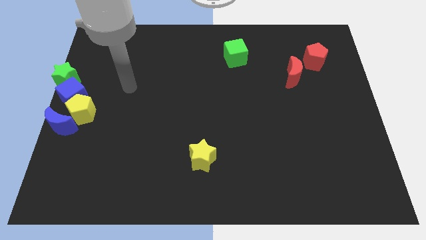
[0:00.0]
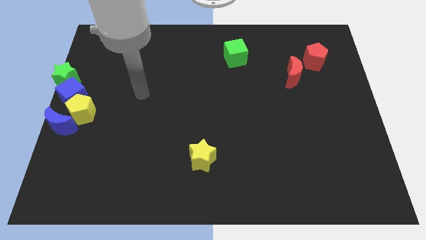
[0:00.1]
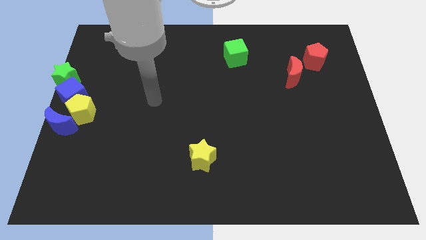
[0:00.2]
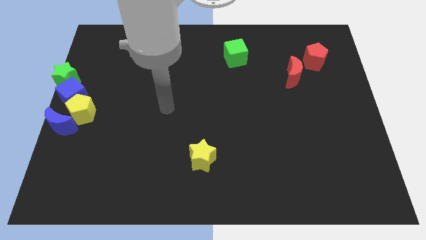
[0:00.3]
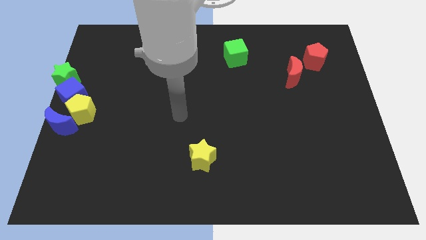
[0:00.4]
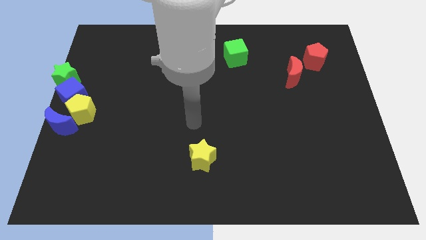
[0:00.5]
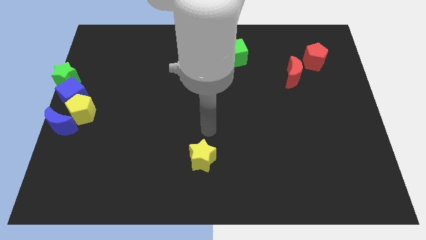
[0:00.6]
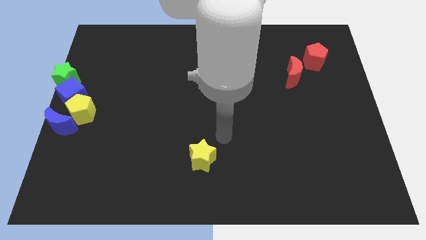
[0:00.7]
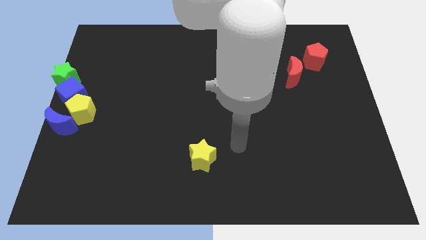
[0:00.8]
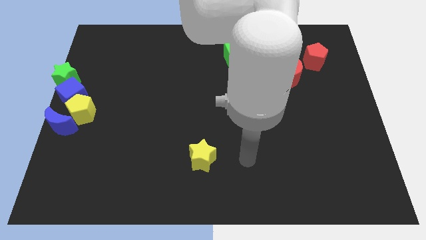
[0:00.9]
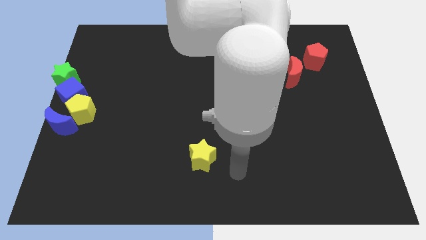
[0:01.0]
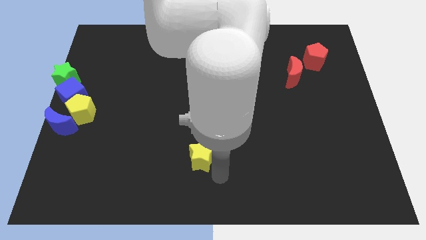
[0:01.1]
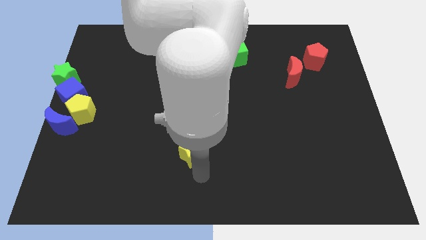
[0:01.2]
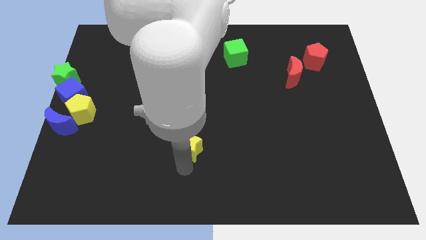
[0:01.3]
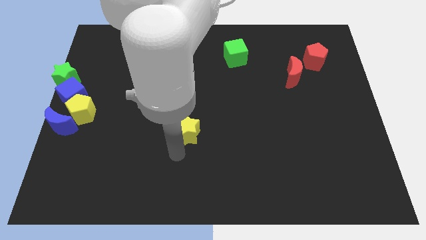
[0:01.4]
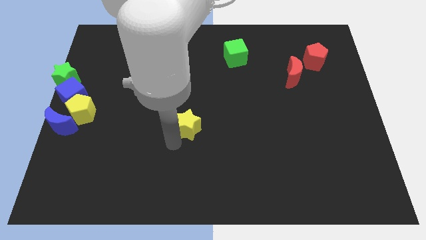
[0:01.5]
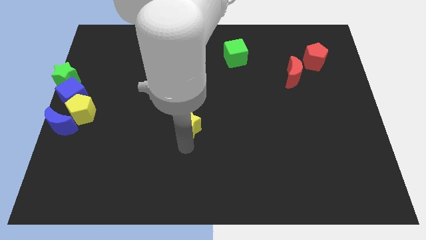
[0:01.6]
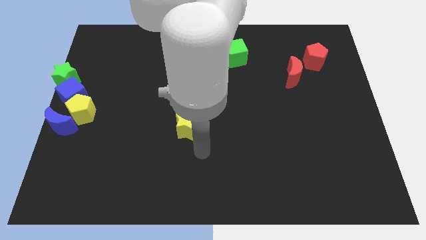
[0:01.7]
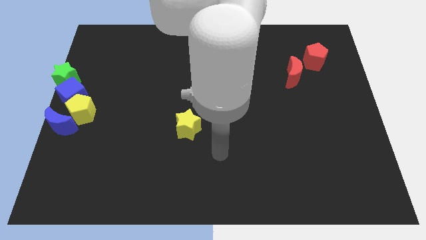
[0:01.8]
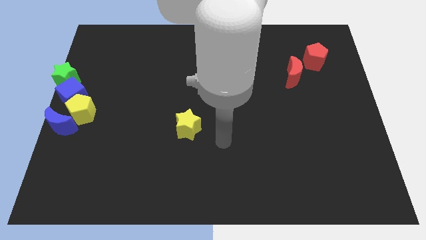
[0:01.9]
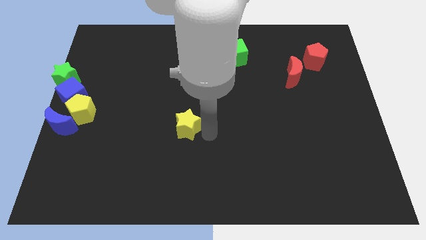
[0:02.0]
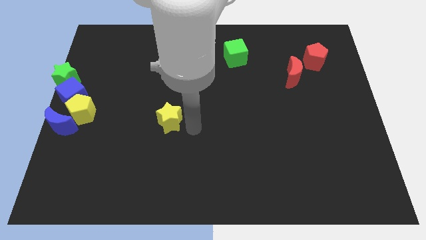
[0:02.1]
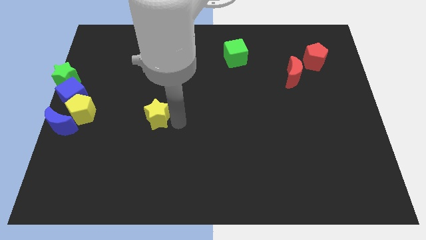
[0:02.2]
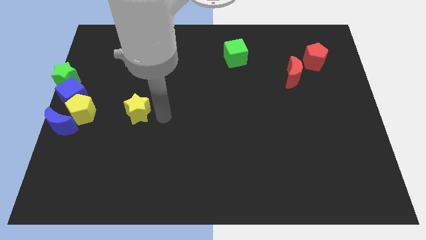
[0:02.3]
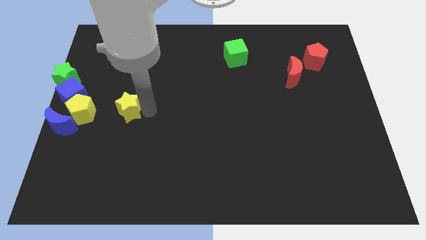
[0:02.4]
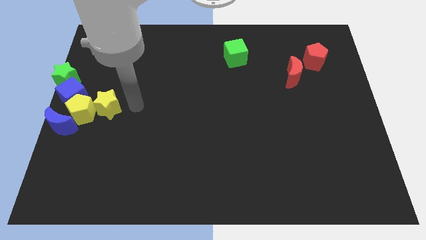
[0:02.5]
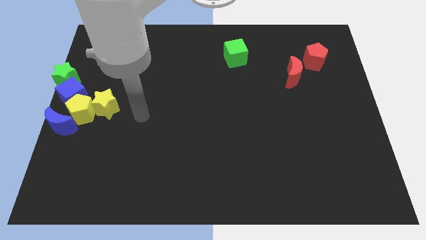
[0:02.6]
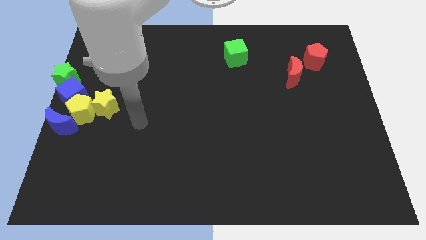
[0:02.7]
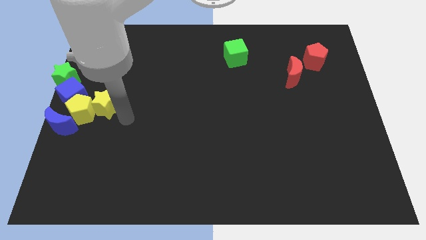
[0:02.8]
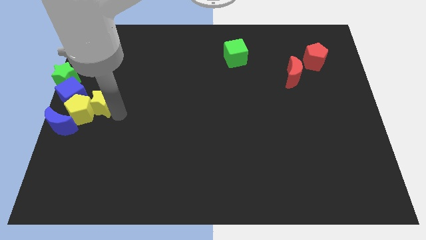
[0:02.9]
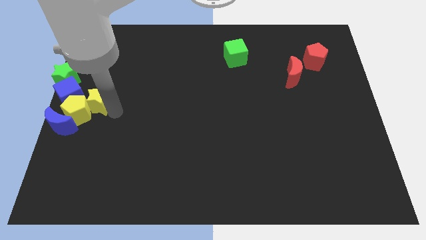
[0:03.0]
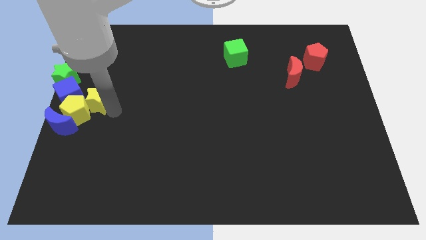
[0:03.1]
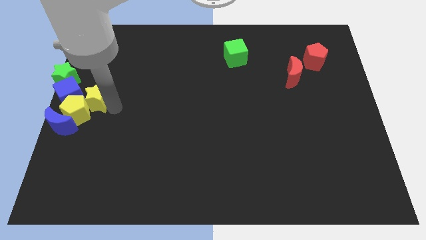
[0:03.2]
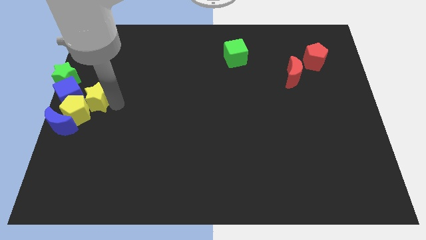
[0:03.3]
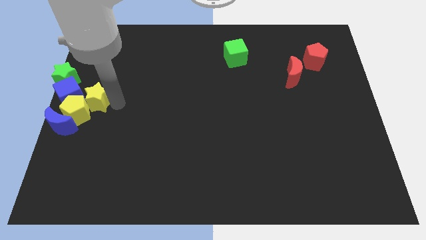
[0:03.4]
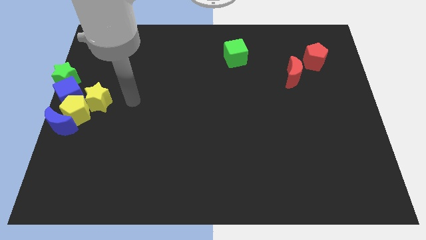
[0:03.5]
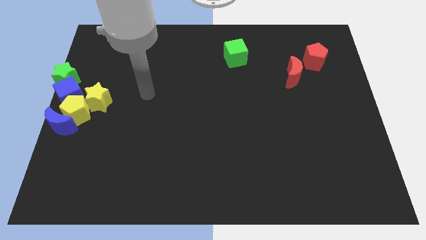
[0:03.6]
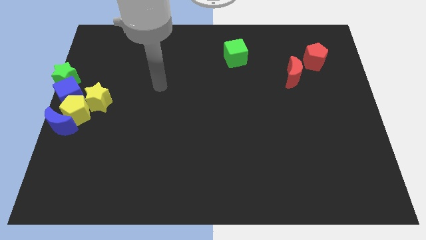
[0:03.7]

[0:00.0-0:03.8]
place the yellow star diagonal right into yellow pentagon

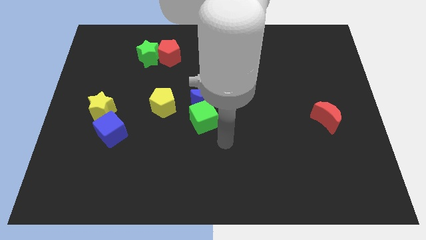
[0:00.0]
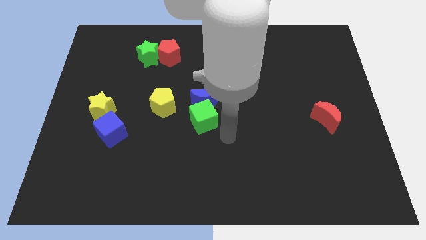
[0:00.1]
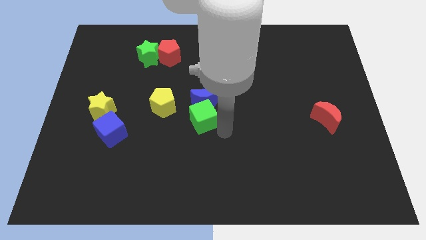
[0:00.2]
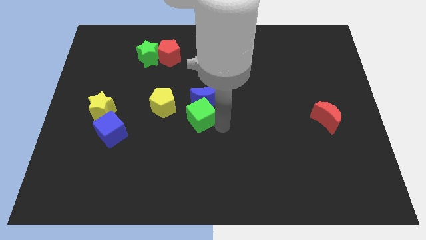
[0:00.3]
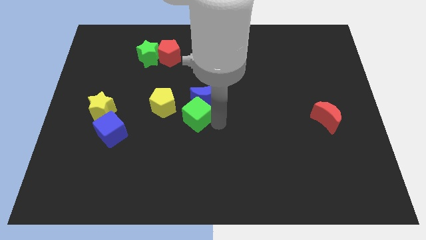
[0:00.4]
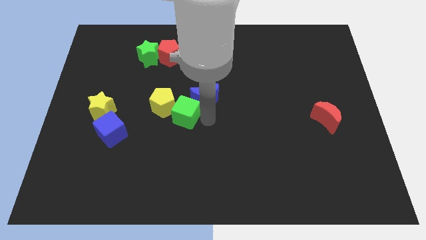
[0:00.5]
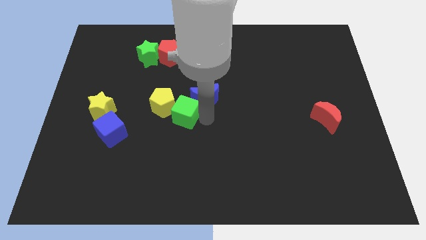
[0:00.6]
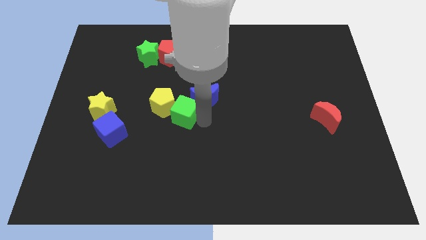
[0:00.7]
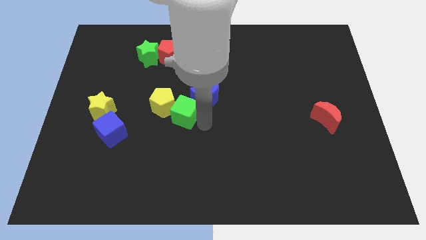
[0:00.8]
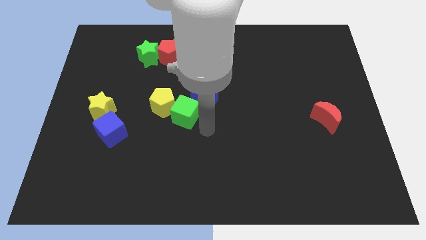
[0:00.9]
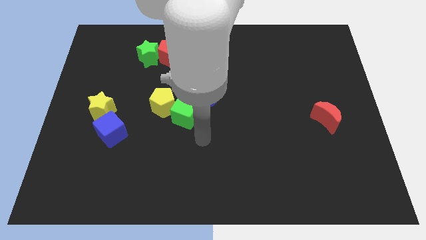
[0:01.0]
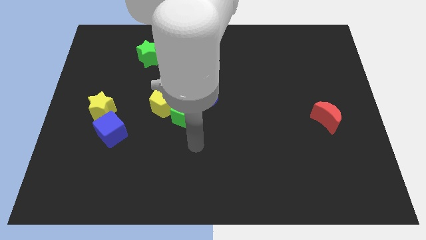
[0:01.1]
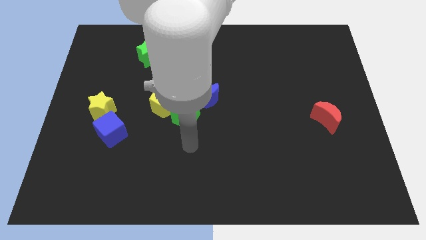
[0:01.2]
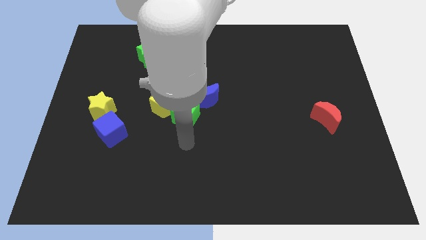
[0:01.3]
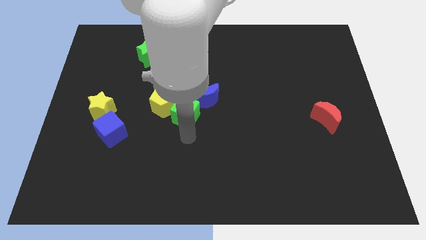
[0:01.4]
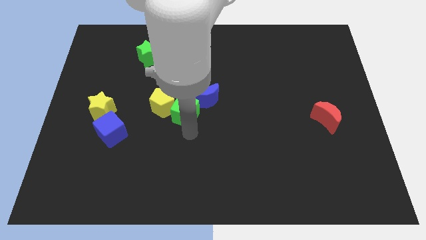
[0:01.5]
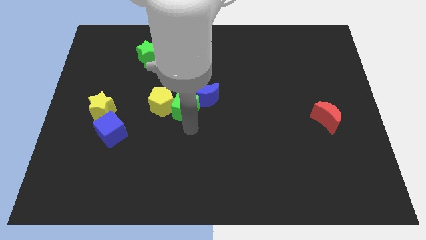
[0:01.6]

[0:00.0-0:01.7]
push the green cube into a group of blocks

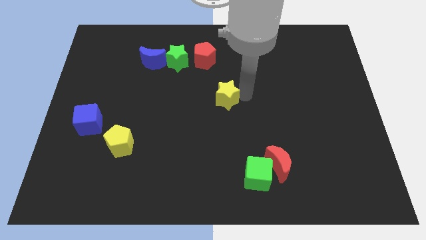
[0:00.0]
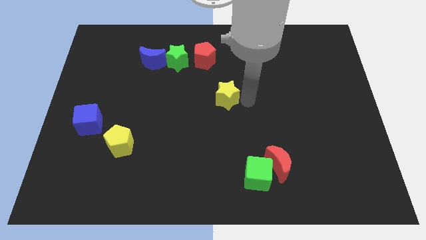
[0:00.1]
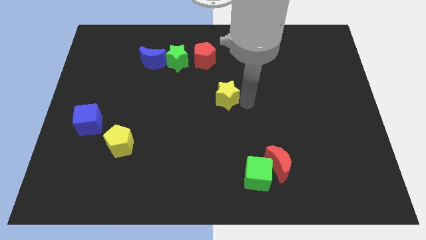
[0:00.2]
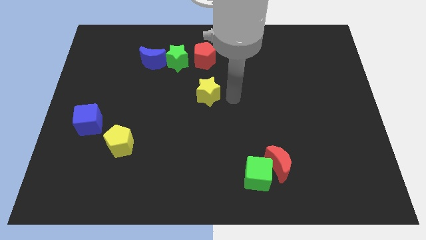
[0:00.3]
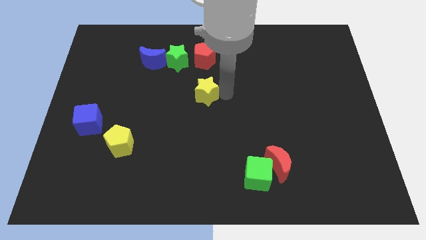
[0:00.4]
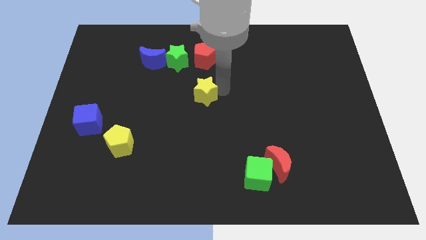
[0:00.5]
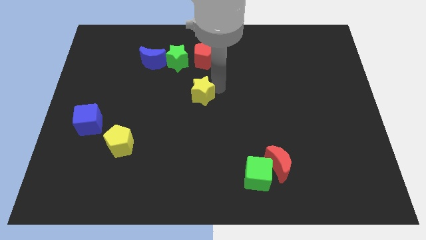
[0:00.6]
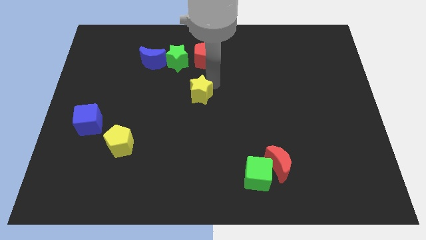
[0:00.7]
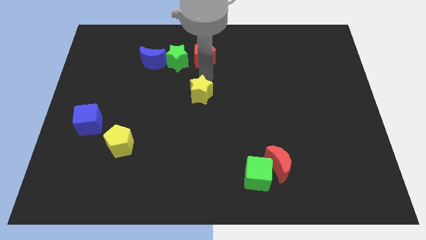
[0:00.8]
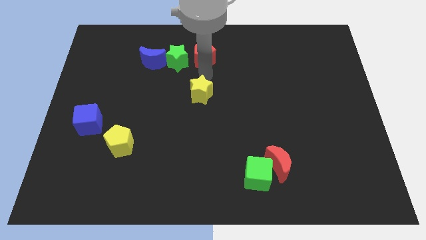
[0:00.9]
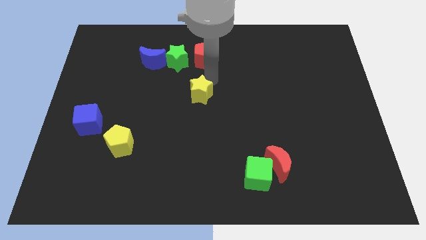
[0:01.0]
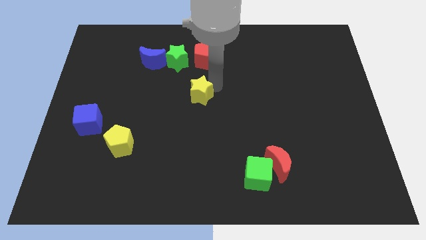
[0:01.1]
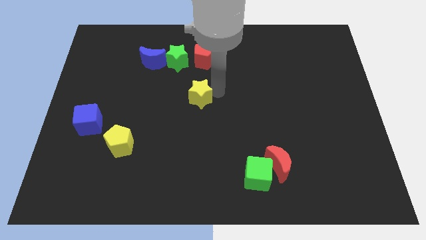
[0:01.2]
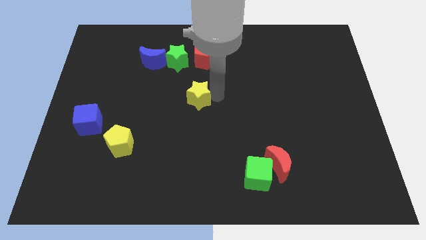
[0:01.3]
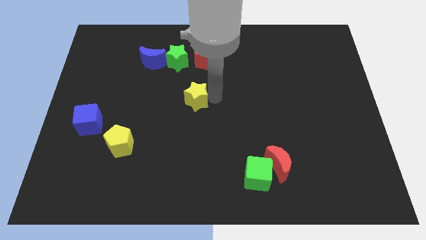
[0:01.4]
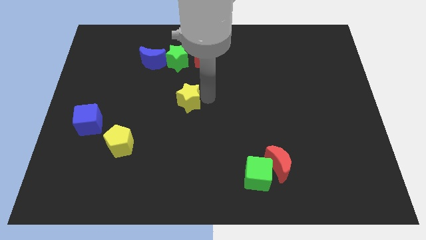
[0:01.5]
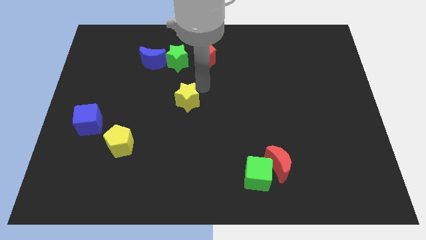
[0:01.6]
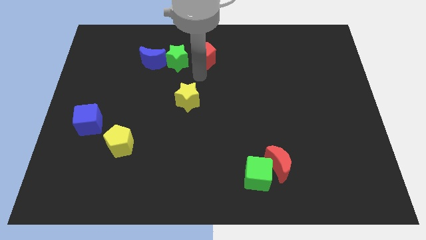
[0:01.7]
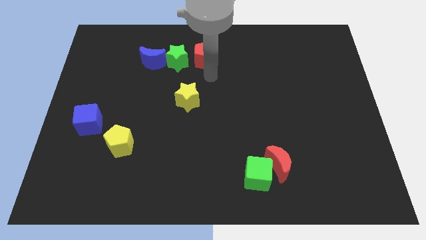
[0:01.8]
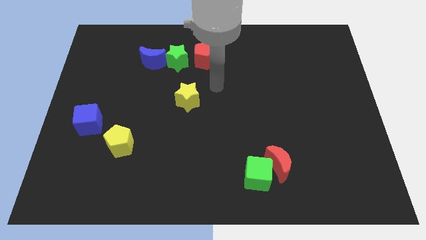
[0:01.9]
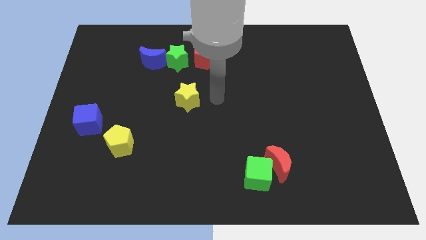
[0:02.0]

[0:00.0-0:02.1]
place the yellow star below the green star

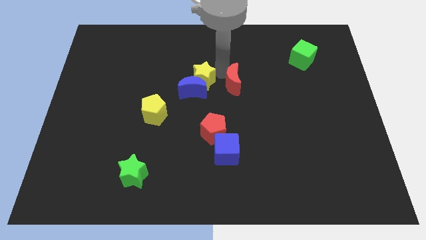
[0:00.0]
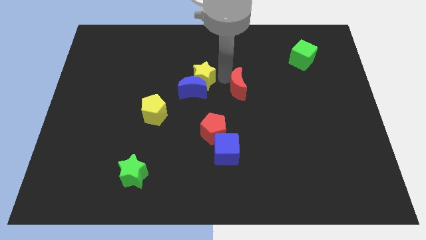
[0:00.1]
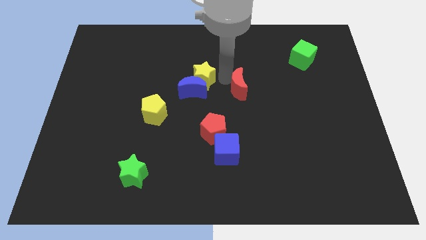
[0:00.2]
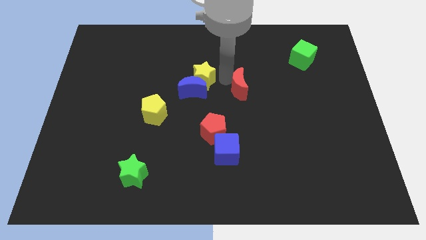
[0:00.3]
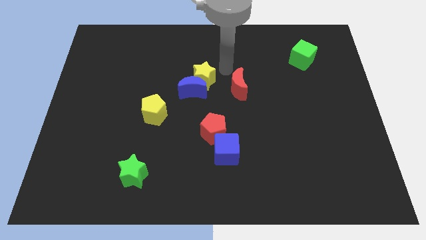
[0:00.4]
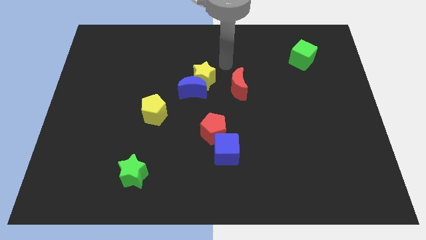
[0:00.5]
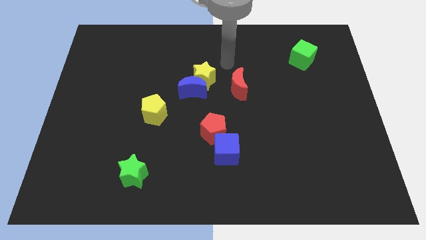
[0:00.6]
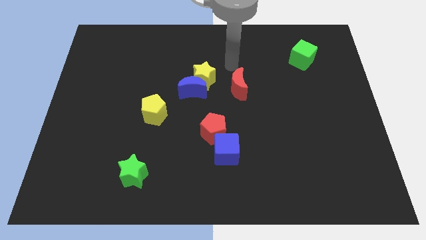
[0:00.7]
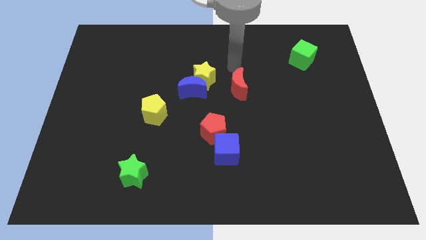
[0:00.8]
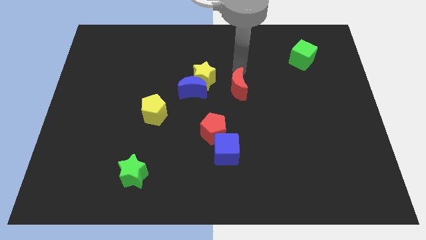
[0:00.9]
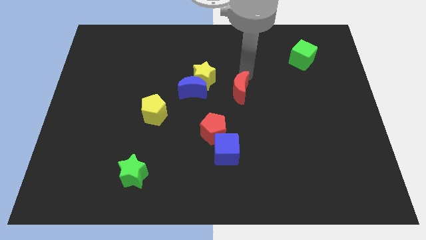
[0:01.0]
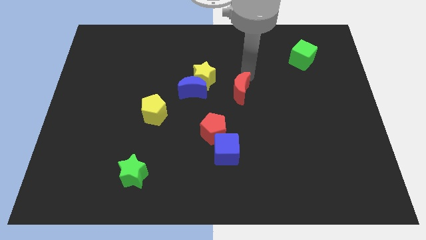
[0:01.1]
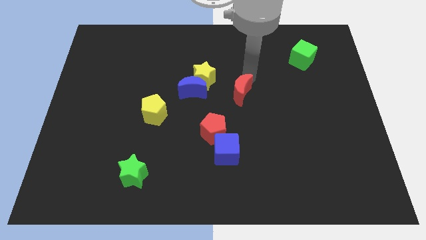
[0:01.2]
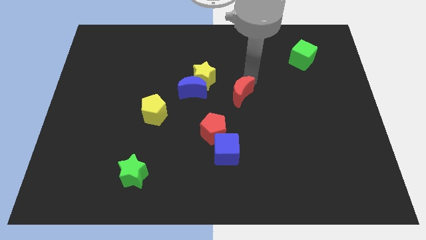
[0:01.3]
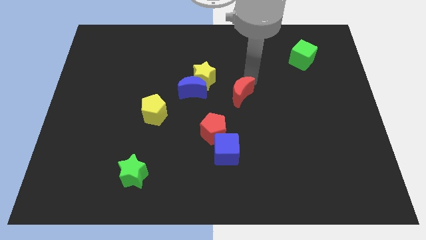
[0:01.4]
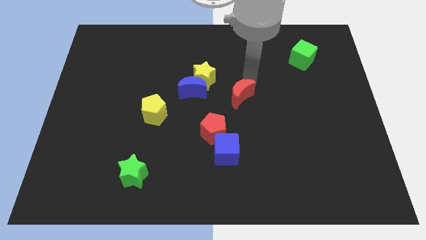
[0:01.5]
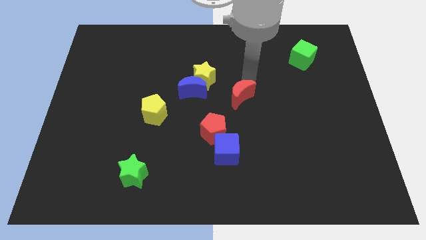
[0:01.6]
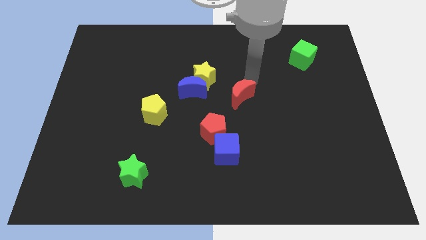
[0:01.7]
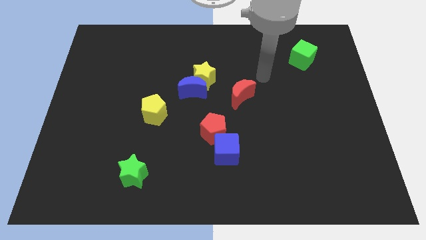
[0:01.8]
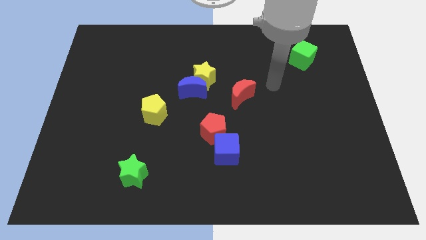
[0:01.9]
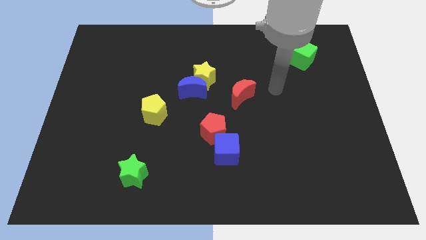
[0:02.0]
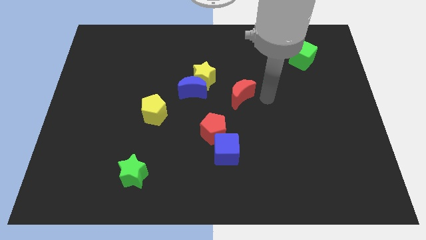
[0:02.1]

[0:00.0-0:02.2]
move red crescent to center of the board
